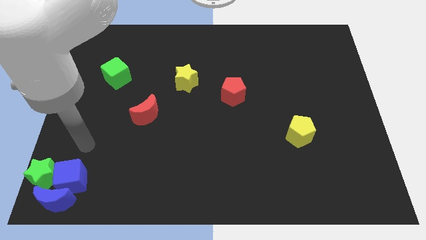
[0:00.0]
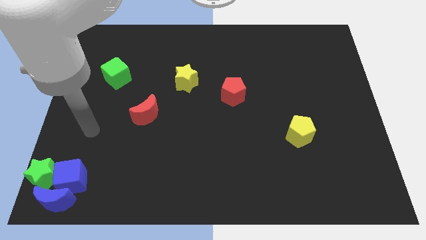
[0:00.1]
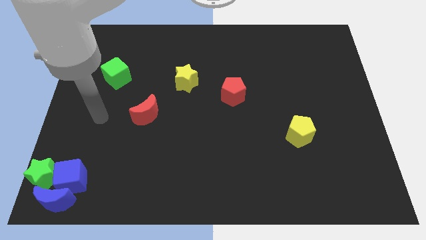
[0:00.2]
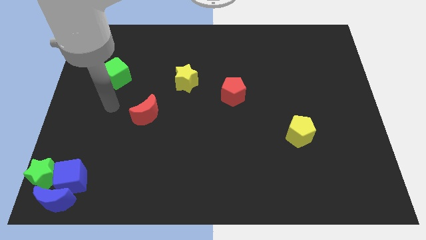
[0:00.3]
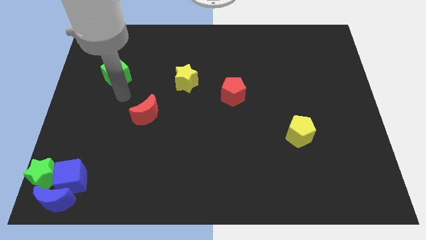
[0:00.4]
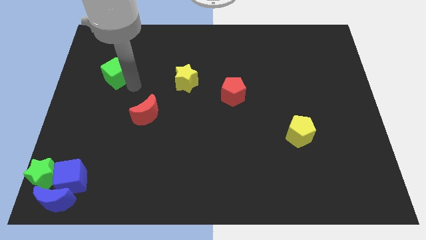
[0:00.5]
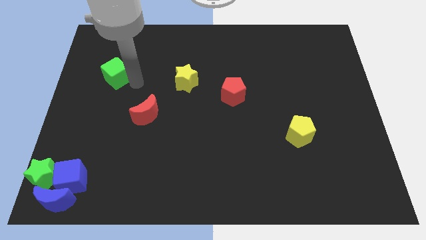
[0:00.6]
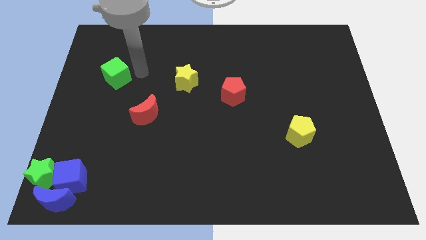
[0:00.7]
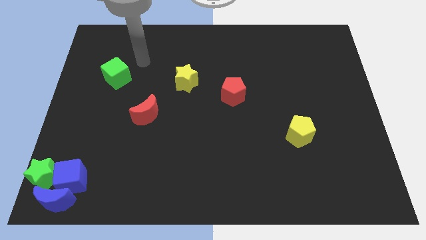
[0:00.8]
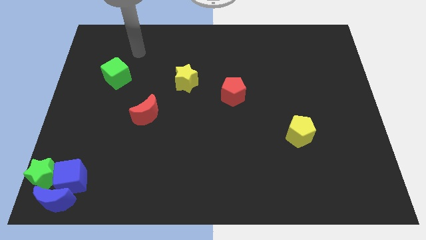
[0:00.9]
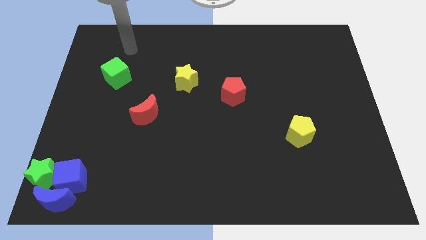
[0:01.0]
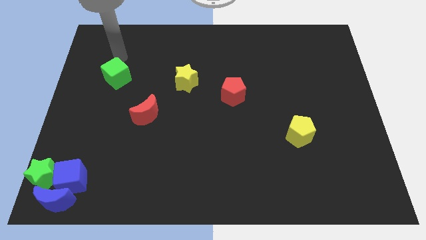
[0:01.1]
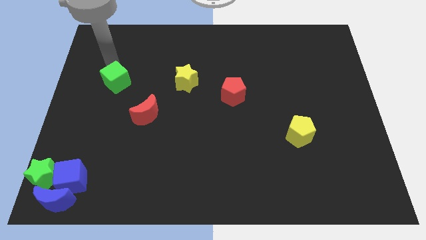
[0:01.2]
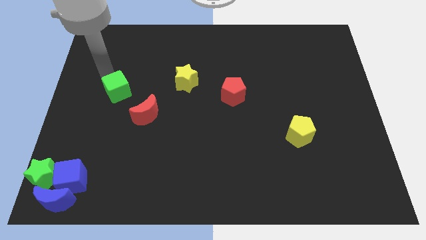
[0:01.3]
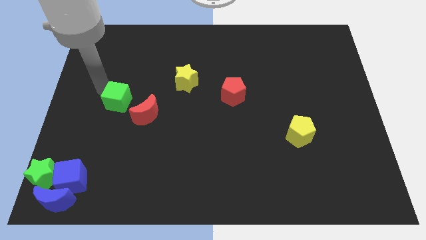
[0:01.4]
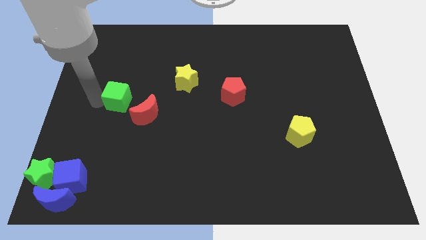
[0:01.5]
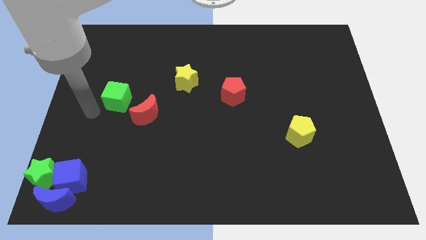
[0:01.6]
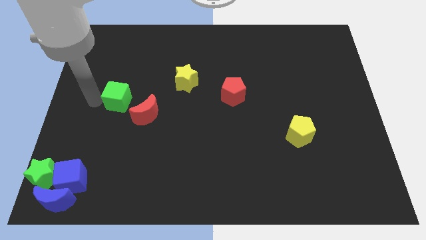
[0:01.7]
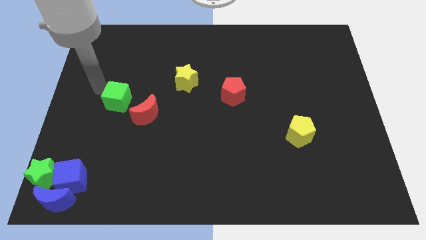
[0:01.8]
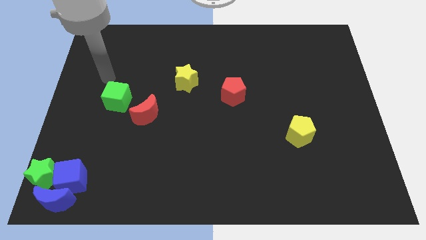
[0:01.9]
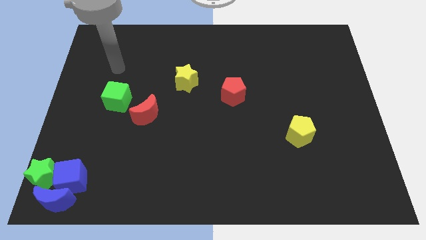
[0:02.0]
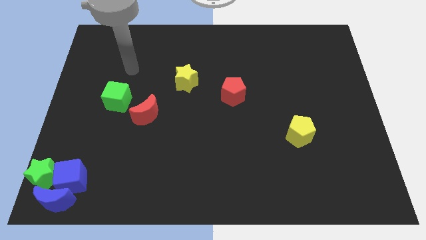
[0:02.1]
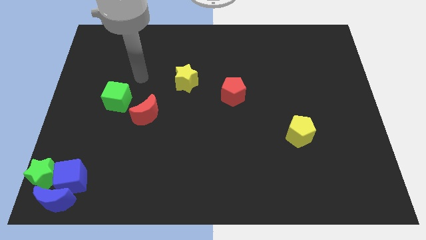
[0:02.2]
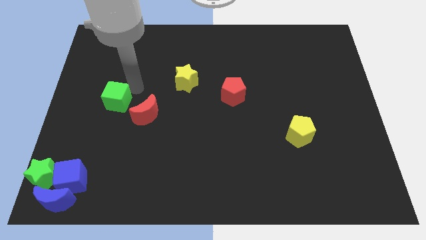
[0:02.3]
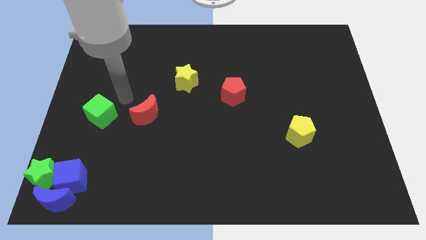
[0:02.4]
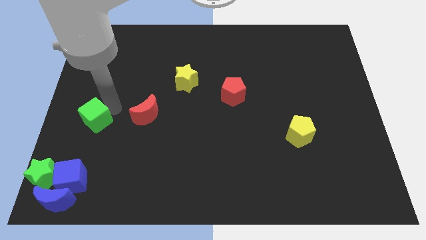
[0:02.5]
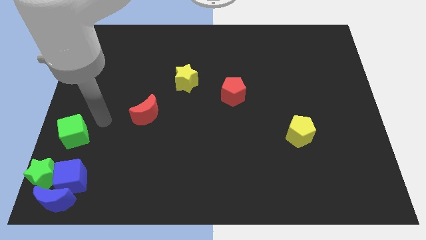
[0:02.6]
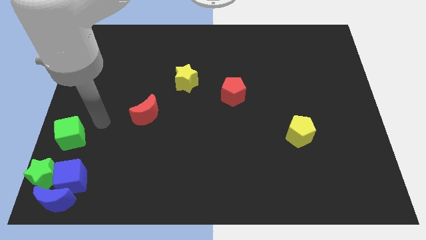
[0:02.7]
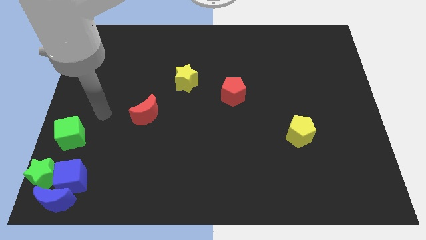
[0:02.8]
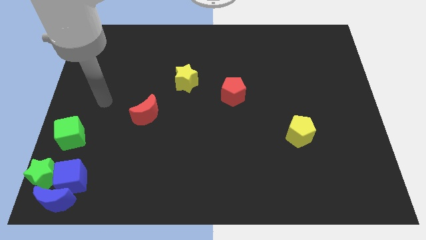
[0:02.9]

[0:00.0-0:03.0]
drag the green cube towards the bottom side of the board

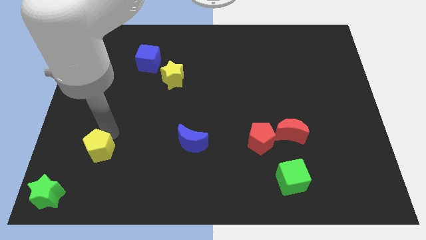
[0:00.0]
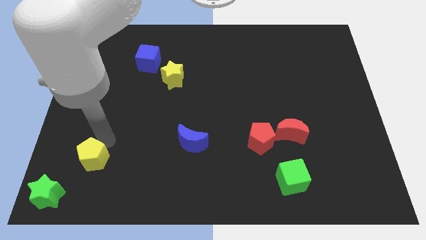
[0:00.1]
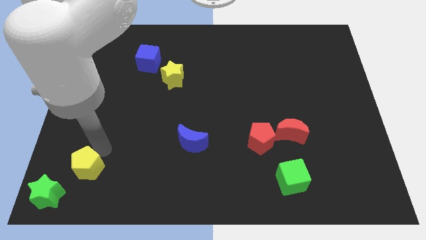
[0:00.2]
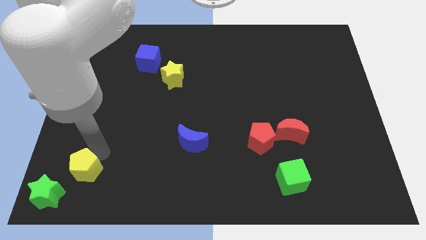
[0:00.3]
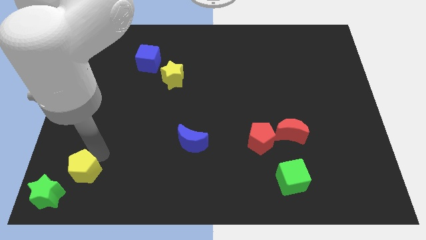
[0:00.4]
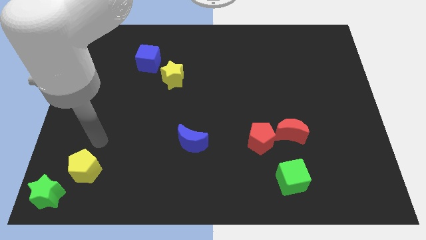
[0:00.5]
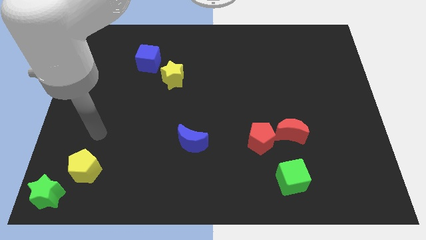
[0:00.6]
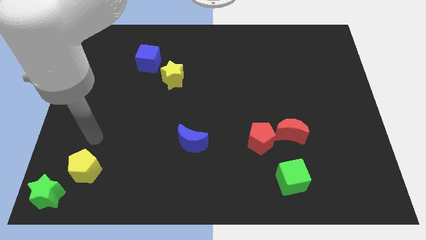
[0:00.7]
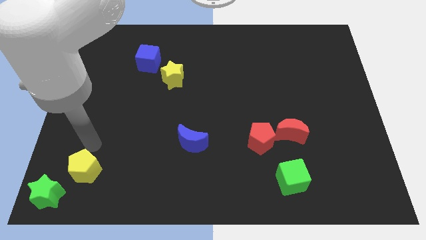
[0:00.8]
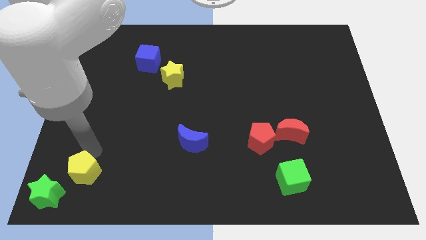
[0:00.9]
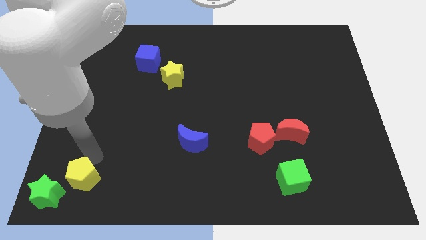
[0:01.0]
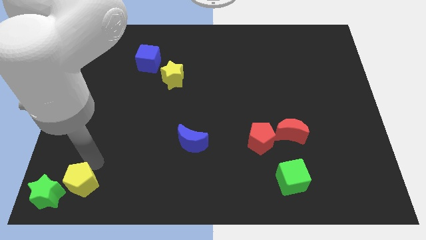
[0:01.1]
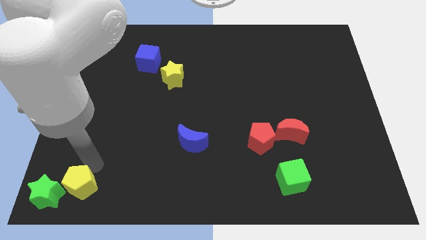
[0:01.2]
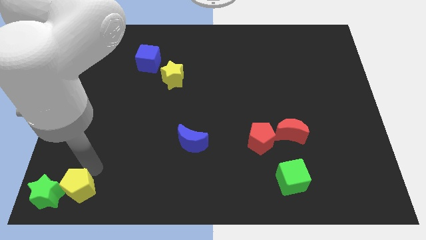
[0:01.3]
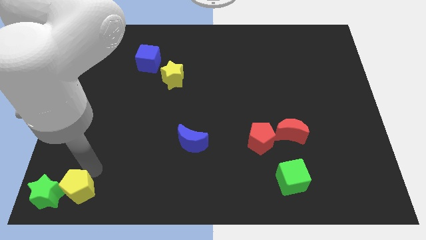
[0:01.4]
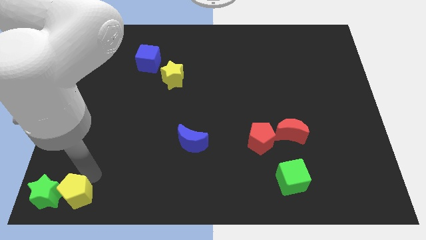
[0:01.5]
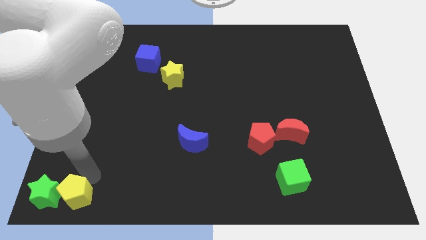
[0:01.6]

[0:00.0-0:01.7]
put the yellow pentagon on the right side of the green star

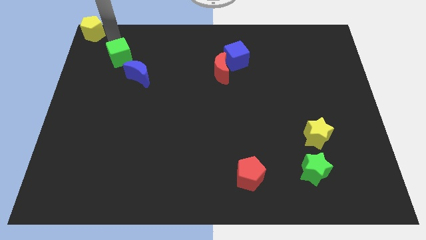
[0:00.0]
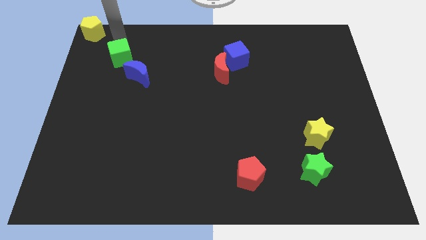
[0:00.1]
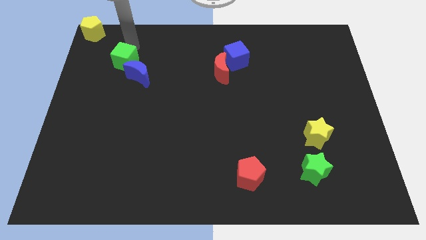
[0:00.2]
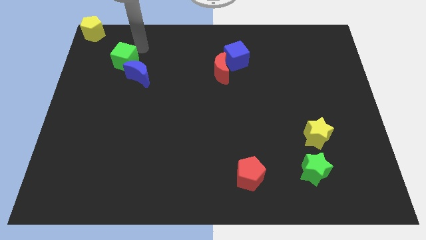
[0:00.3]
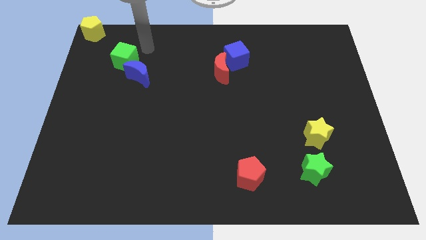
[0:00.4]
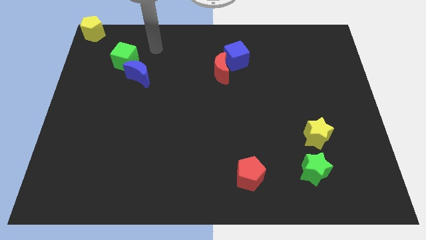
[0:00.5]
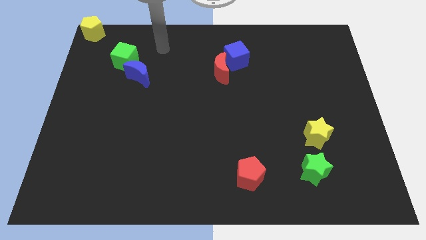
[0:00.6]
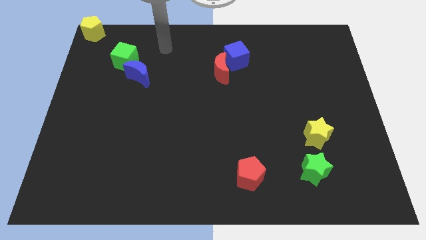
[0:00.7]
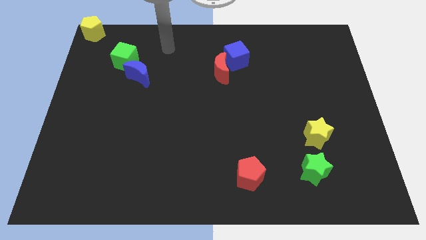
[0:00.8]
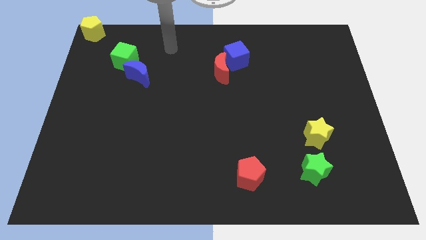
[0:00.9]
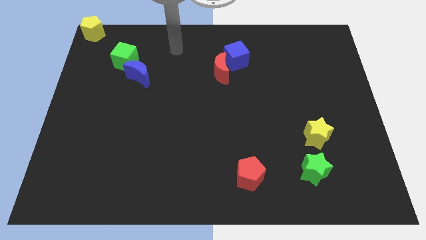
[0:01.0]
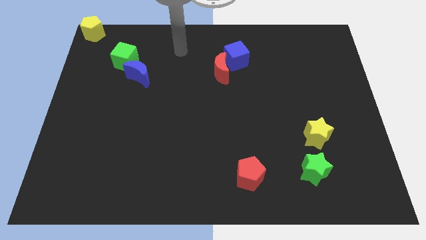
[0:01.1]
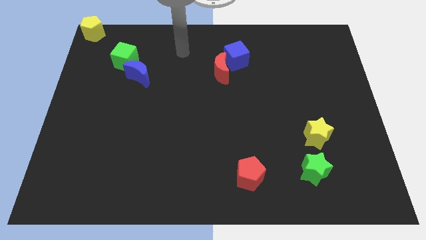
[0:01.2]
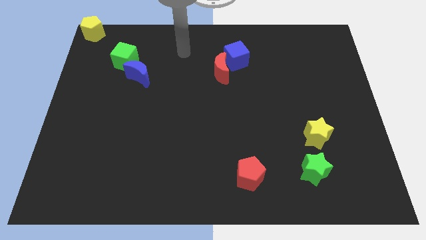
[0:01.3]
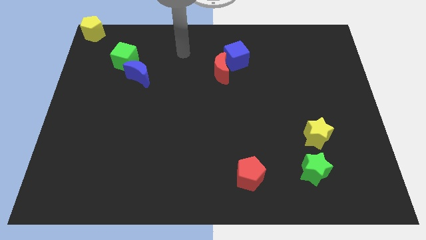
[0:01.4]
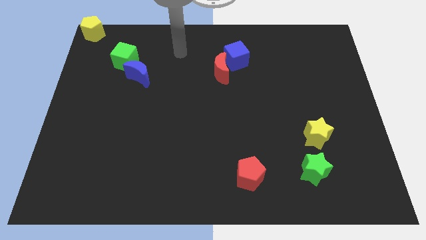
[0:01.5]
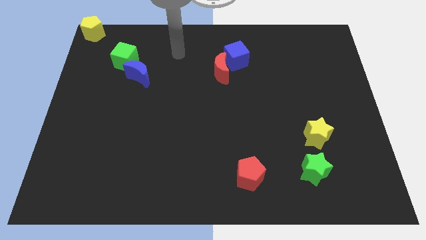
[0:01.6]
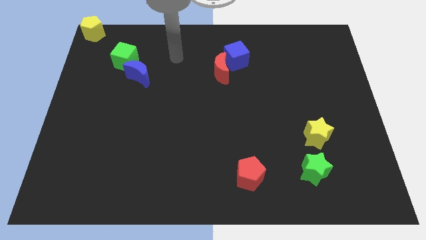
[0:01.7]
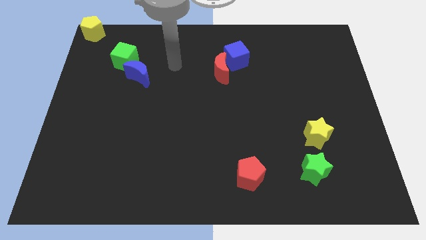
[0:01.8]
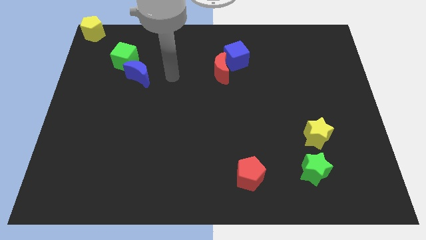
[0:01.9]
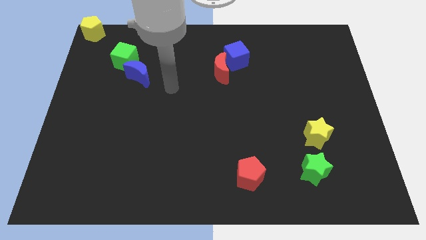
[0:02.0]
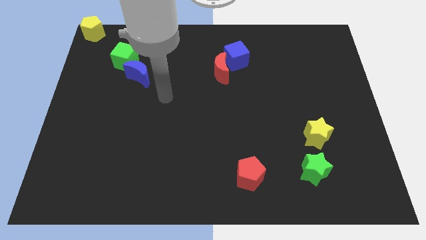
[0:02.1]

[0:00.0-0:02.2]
slightly move the green cube above the blue crescent

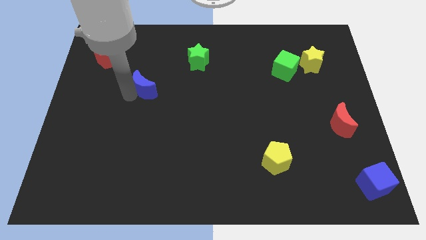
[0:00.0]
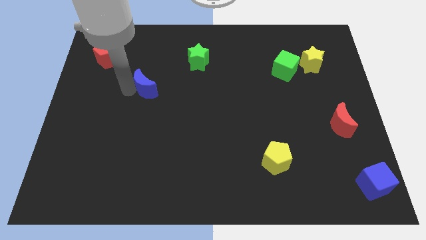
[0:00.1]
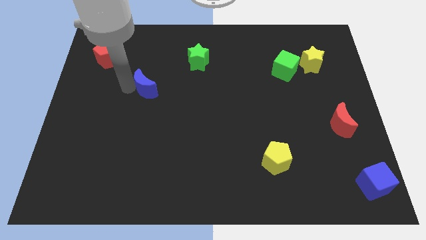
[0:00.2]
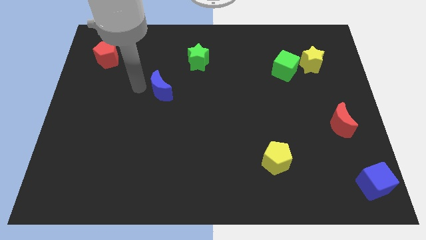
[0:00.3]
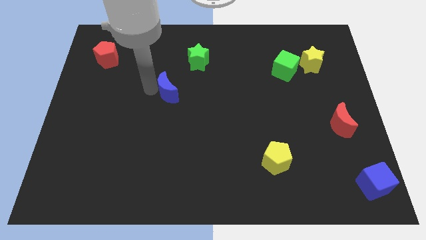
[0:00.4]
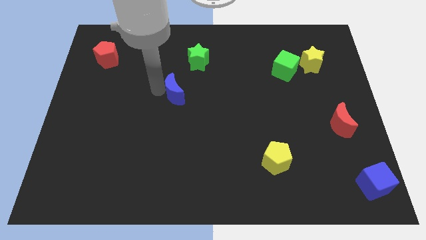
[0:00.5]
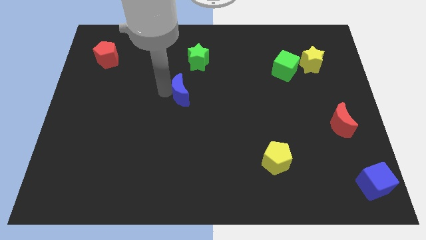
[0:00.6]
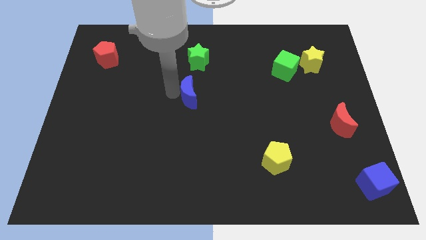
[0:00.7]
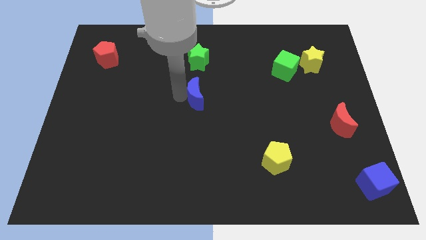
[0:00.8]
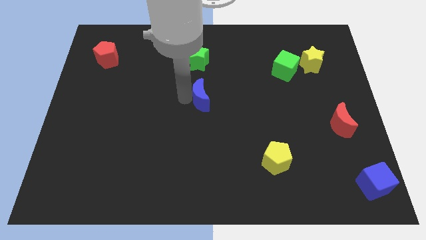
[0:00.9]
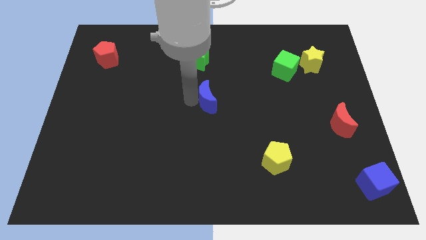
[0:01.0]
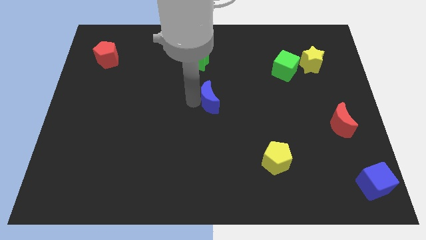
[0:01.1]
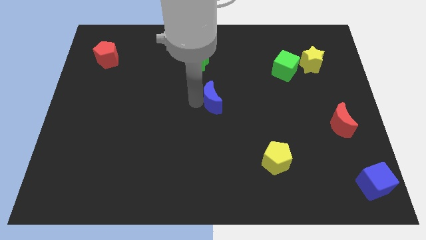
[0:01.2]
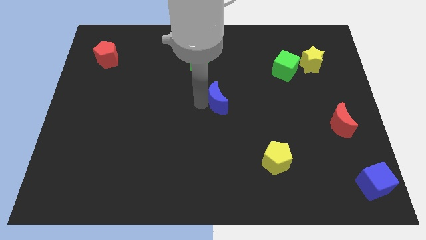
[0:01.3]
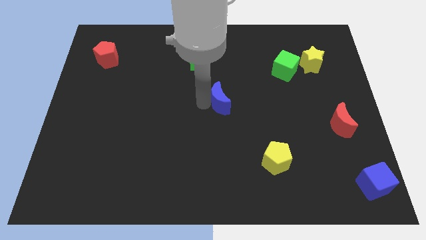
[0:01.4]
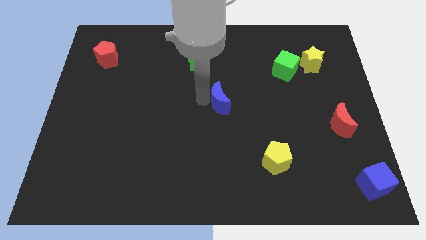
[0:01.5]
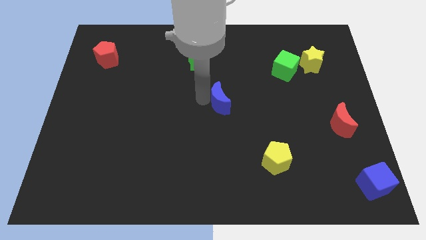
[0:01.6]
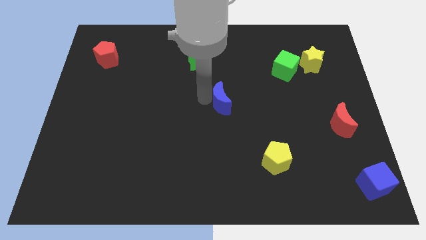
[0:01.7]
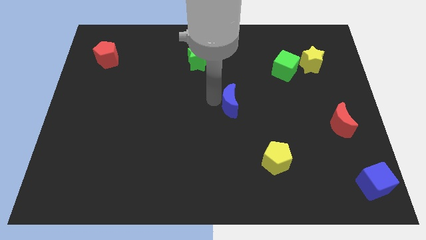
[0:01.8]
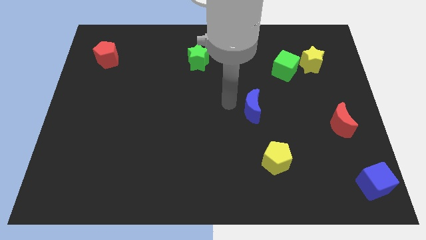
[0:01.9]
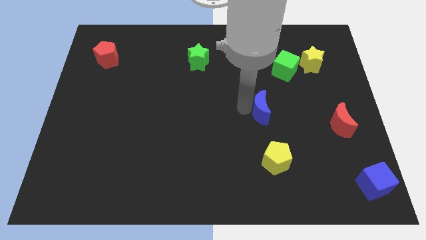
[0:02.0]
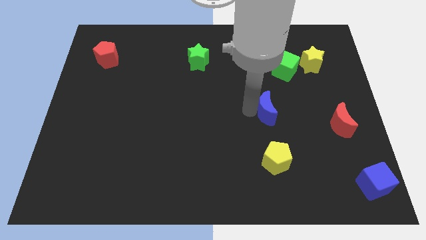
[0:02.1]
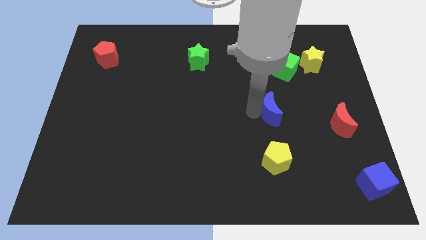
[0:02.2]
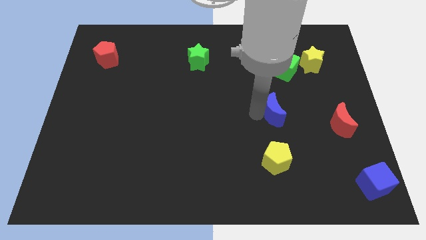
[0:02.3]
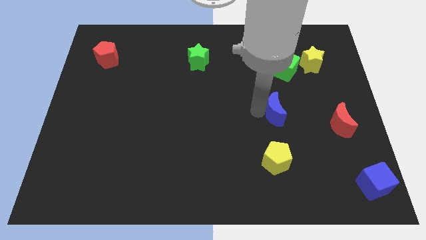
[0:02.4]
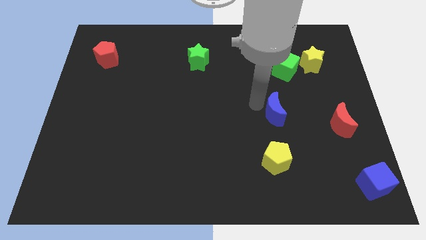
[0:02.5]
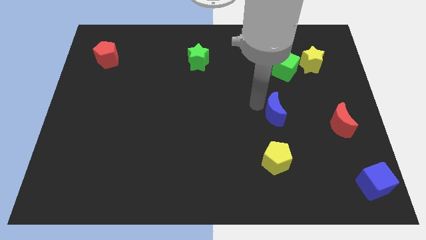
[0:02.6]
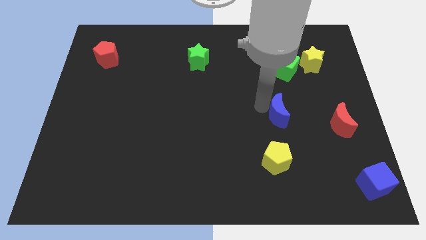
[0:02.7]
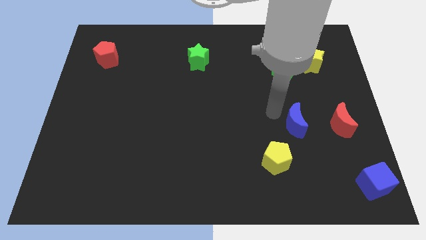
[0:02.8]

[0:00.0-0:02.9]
push blue crescent below green cube
